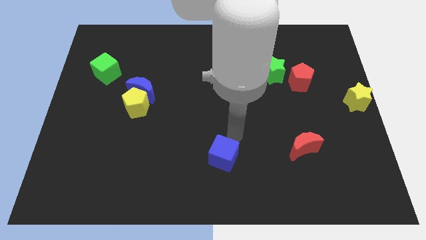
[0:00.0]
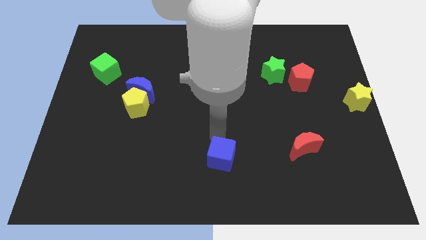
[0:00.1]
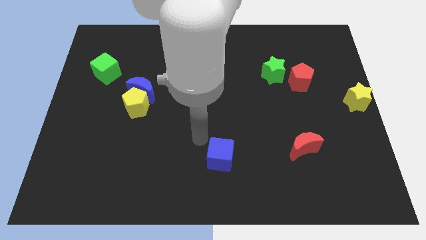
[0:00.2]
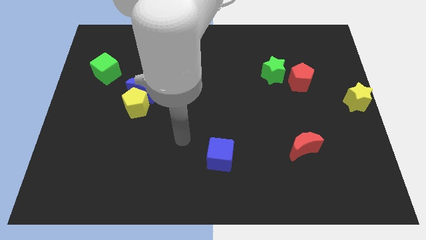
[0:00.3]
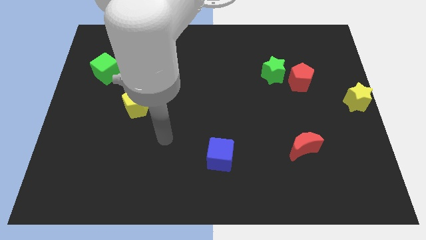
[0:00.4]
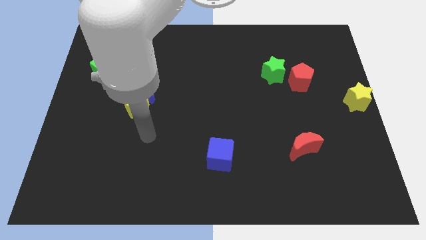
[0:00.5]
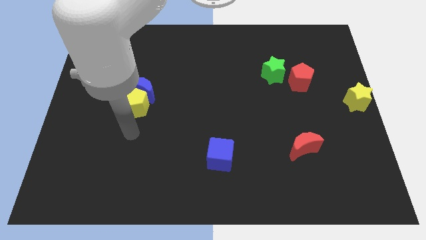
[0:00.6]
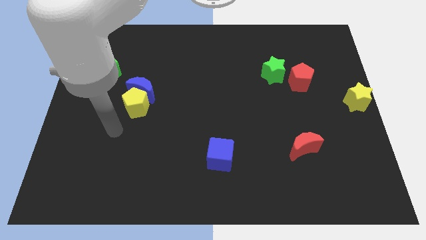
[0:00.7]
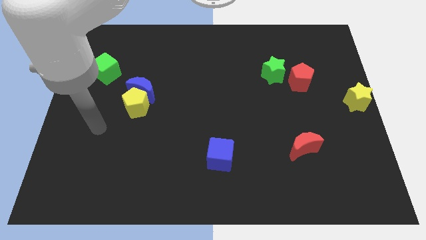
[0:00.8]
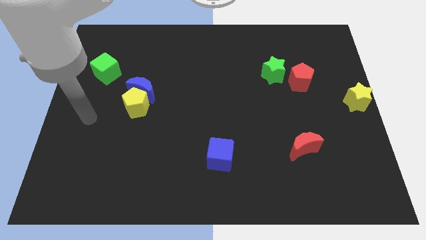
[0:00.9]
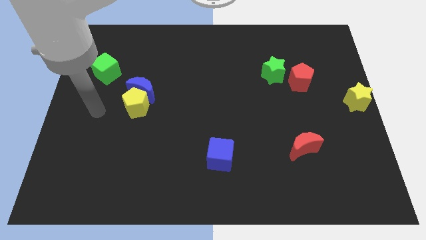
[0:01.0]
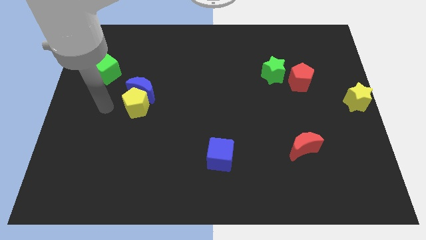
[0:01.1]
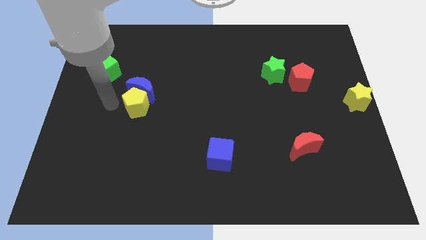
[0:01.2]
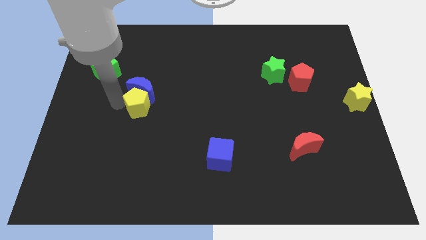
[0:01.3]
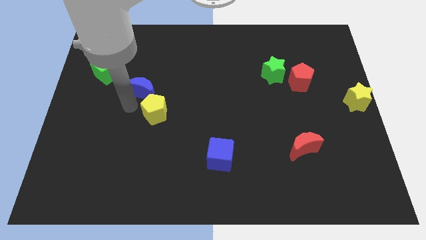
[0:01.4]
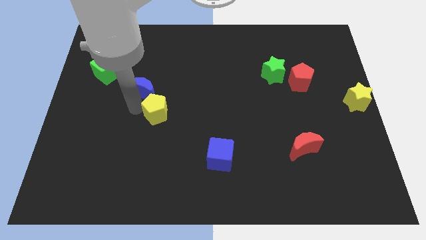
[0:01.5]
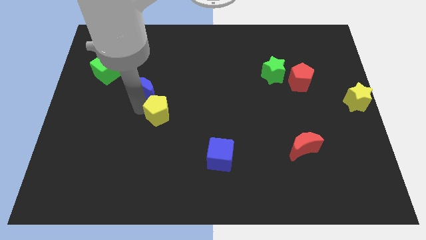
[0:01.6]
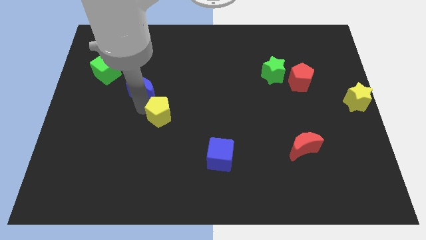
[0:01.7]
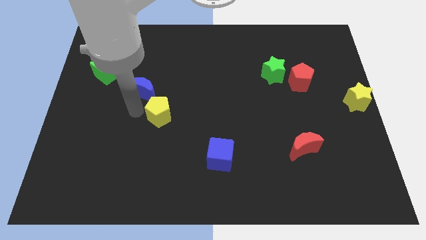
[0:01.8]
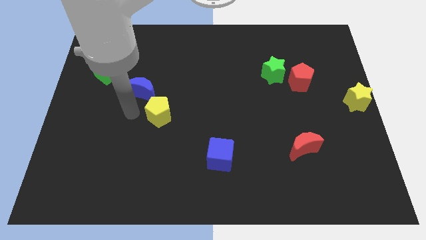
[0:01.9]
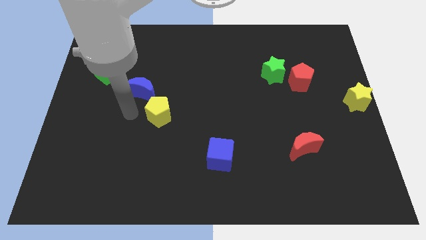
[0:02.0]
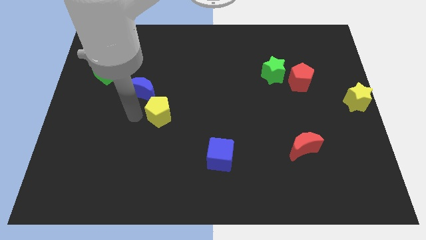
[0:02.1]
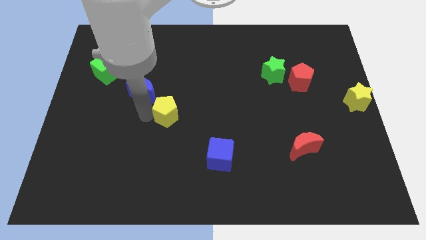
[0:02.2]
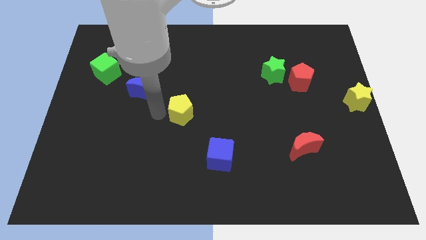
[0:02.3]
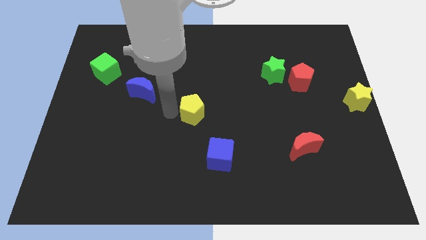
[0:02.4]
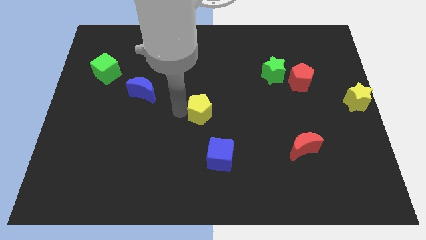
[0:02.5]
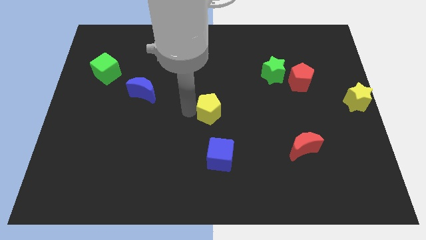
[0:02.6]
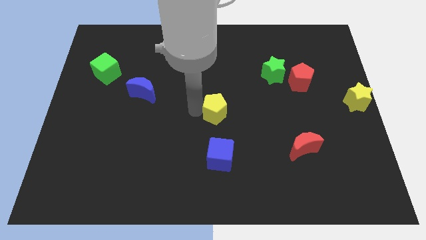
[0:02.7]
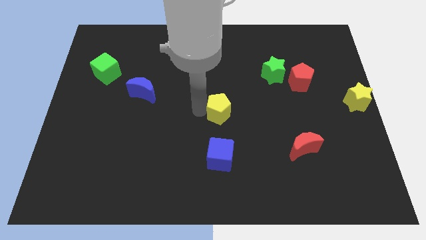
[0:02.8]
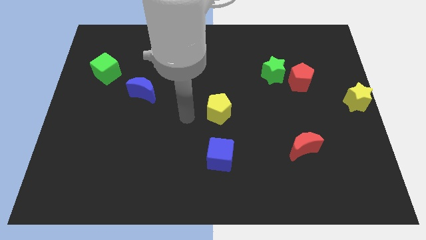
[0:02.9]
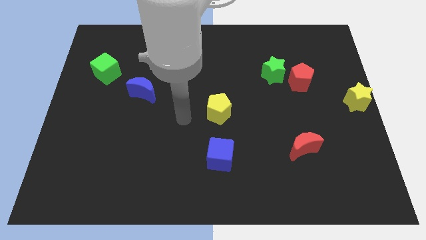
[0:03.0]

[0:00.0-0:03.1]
place yellow pentagon at the center of the board

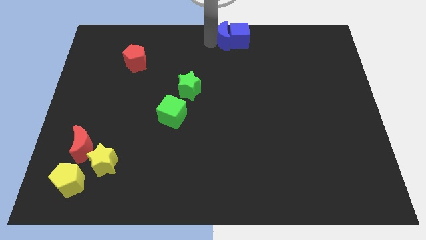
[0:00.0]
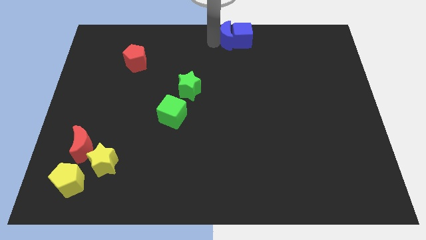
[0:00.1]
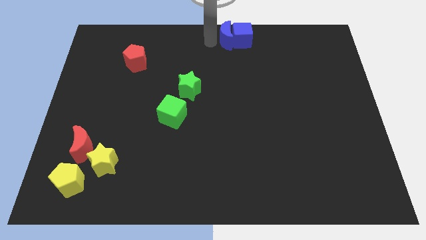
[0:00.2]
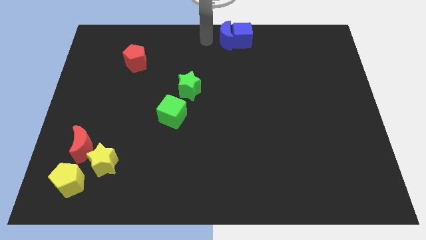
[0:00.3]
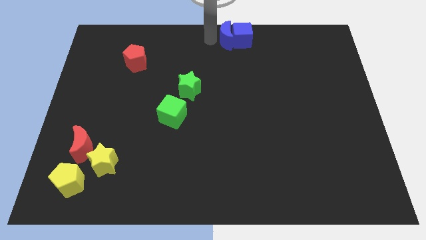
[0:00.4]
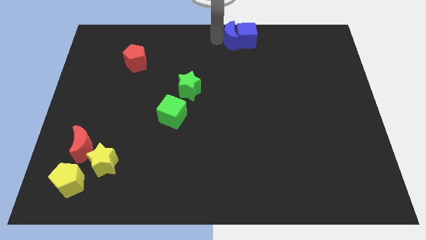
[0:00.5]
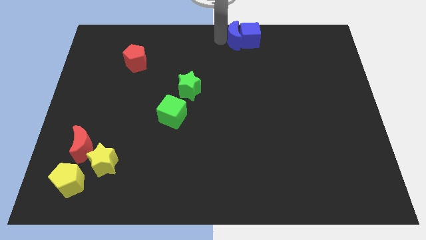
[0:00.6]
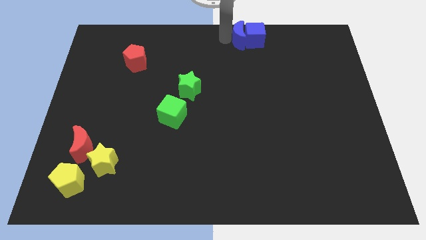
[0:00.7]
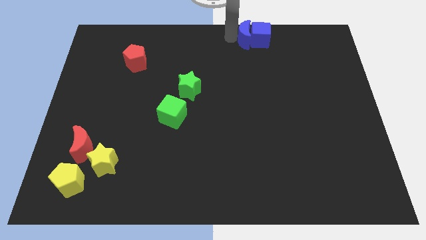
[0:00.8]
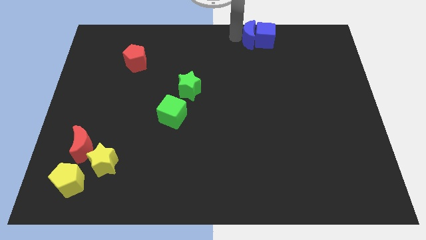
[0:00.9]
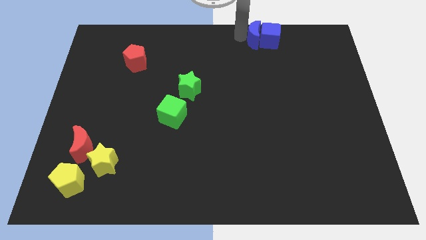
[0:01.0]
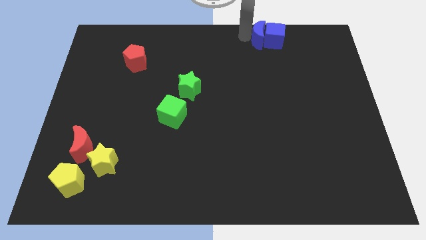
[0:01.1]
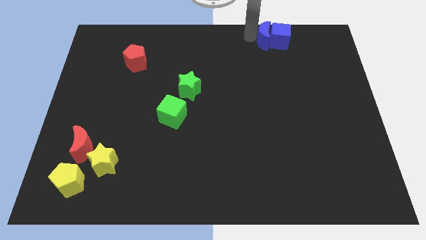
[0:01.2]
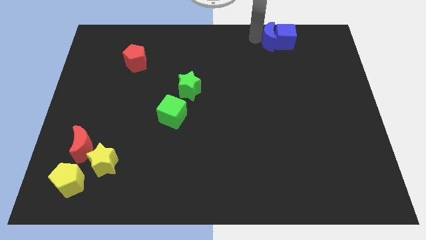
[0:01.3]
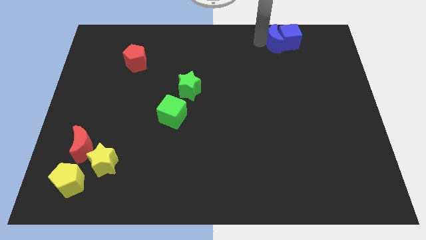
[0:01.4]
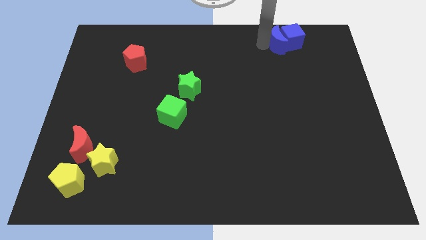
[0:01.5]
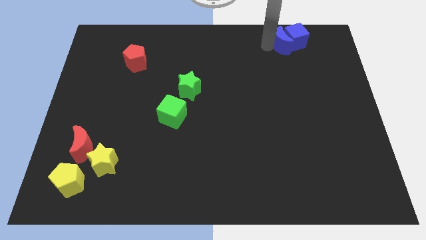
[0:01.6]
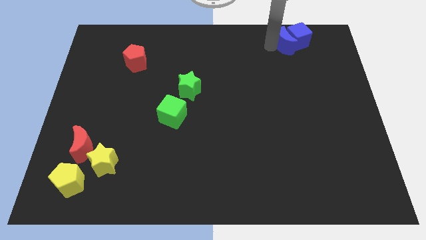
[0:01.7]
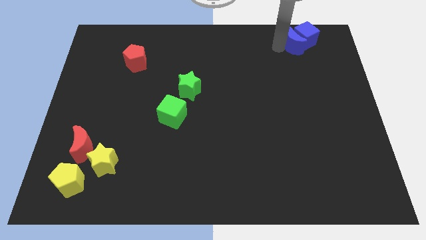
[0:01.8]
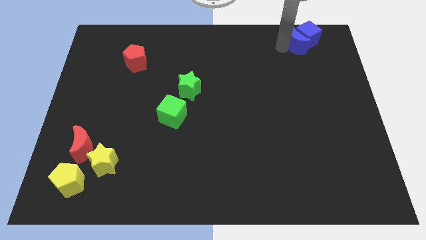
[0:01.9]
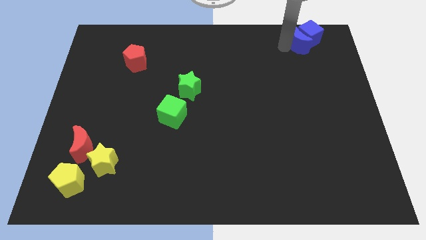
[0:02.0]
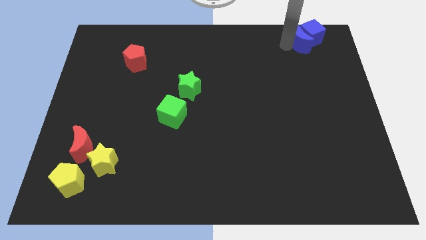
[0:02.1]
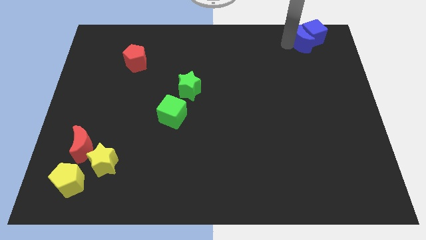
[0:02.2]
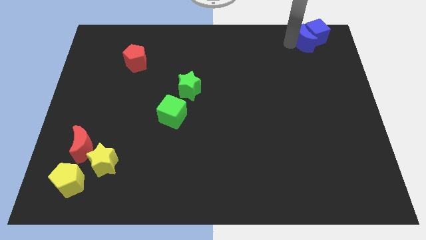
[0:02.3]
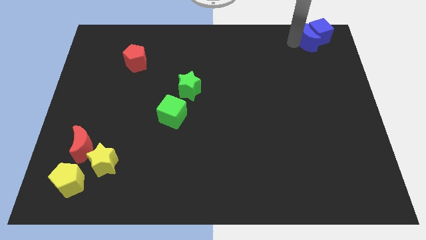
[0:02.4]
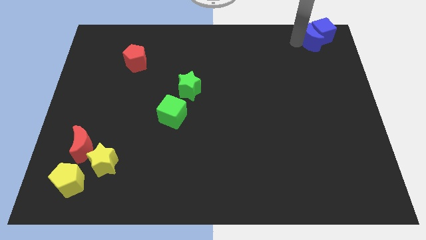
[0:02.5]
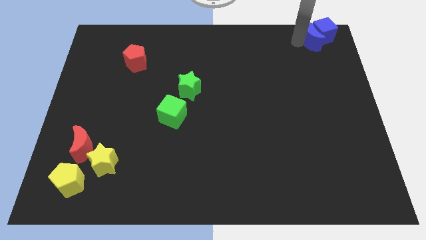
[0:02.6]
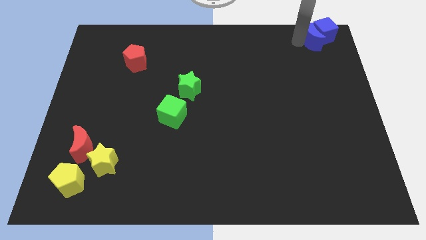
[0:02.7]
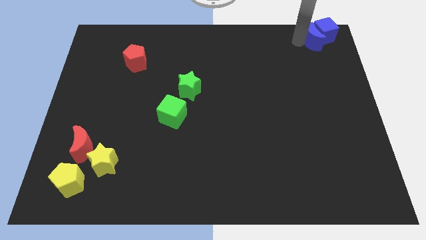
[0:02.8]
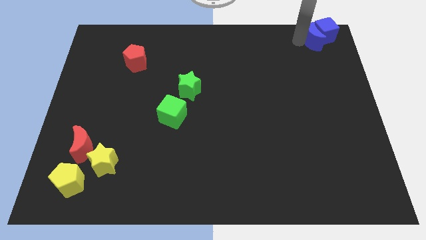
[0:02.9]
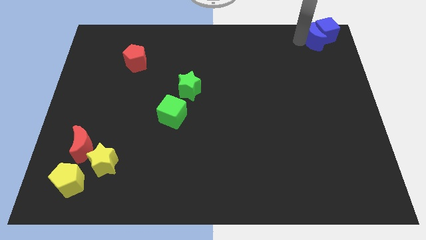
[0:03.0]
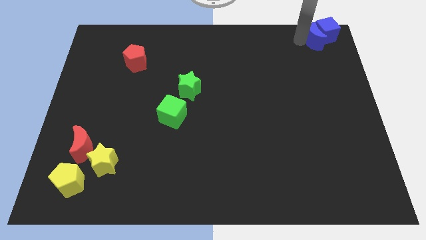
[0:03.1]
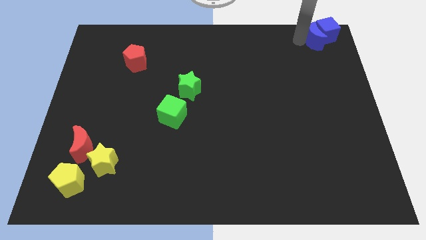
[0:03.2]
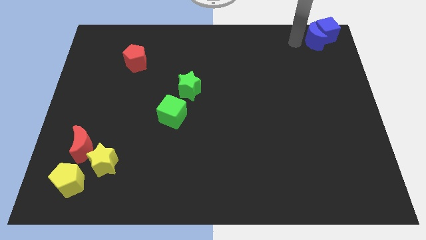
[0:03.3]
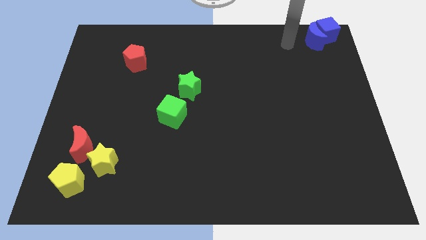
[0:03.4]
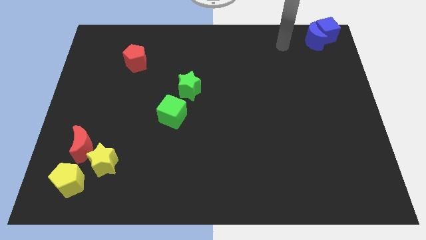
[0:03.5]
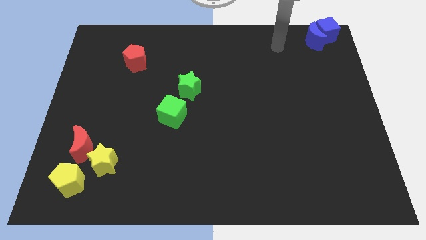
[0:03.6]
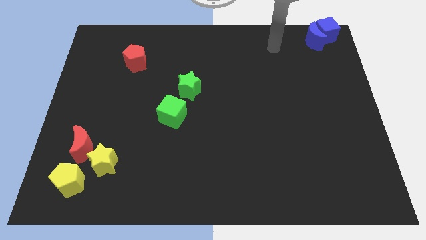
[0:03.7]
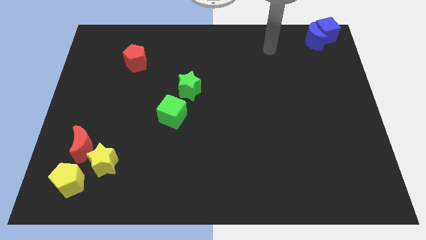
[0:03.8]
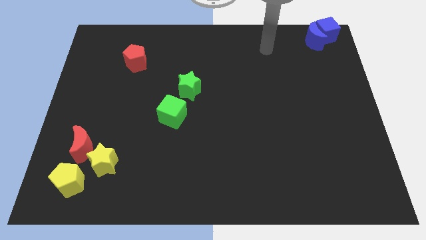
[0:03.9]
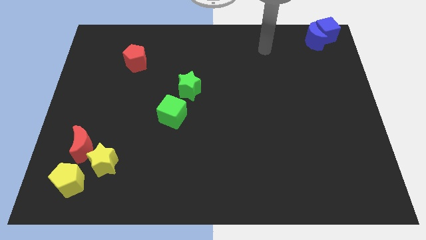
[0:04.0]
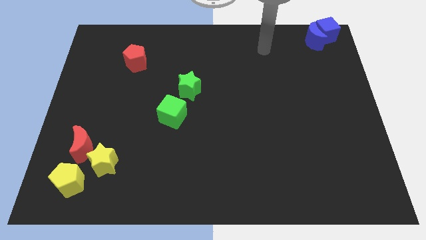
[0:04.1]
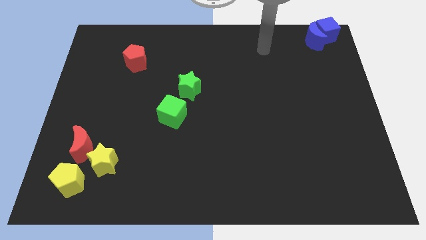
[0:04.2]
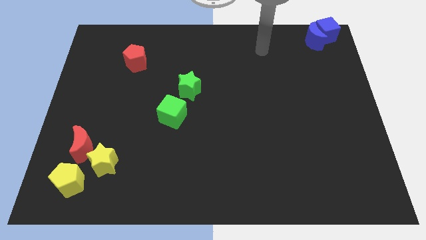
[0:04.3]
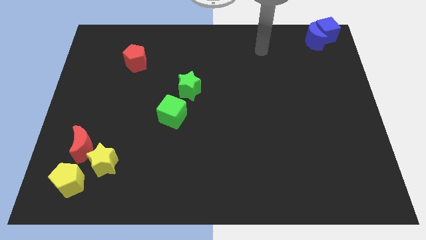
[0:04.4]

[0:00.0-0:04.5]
push the blue crescent and blue cube to the right top corner

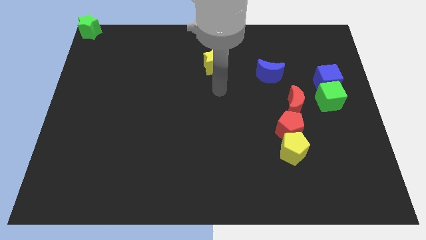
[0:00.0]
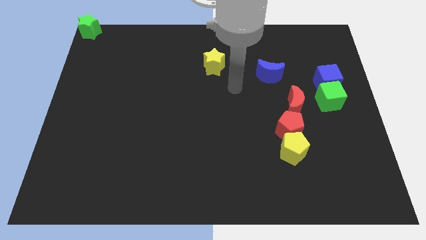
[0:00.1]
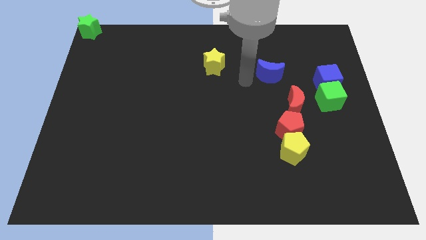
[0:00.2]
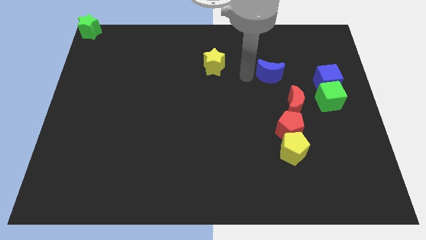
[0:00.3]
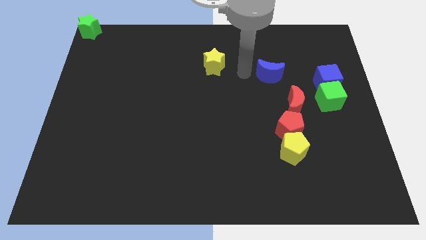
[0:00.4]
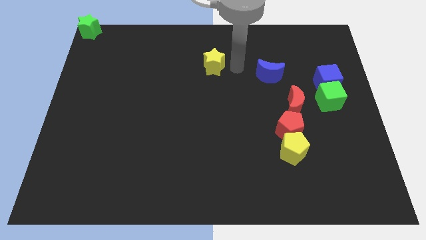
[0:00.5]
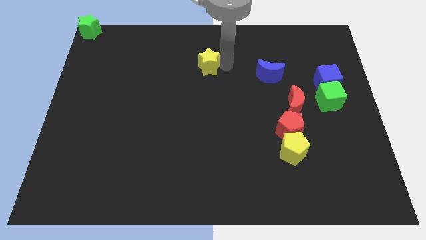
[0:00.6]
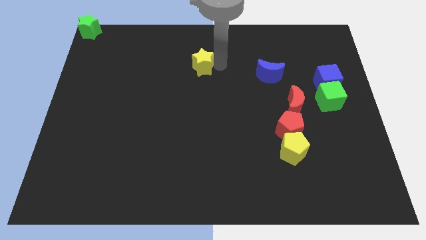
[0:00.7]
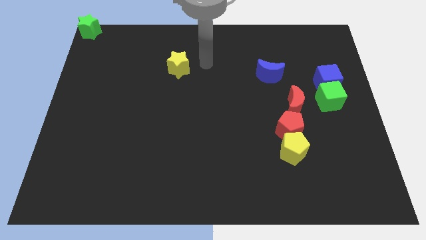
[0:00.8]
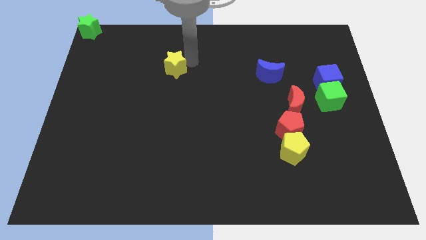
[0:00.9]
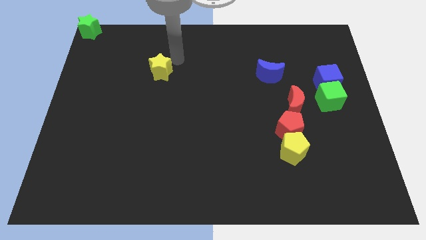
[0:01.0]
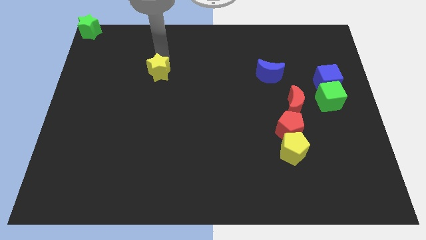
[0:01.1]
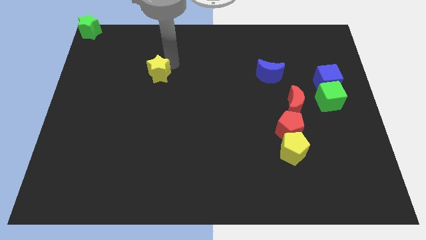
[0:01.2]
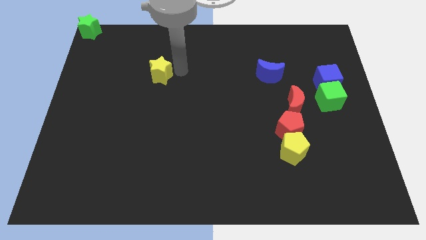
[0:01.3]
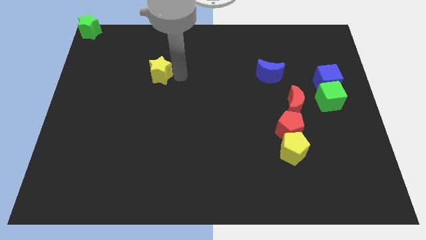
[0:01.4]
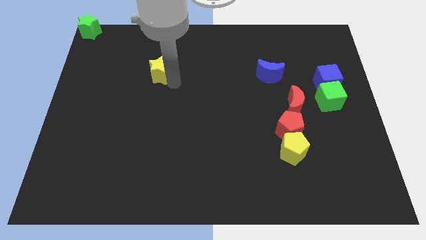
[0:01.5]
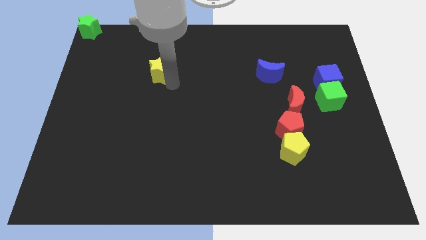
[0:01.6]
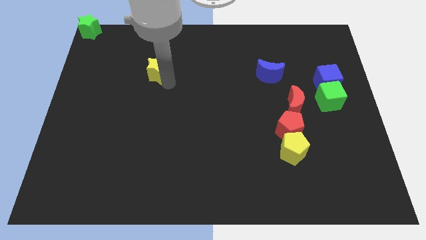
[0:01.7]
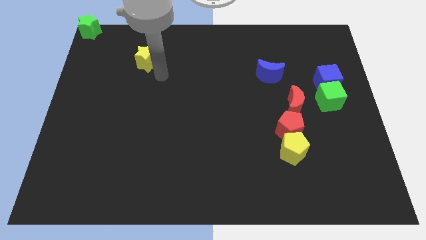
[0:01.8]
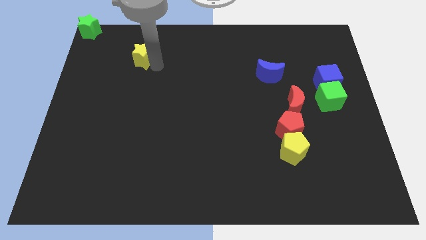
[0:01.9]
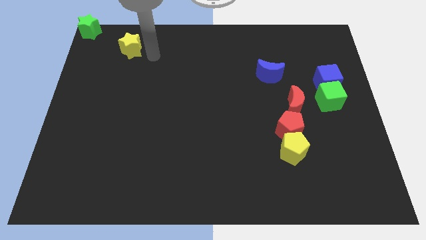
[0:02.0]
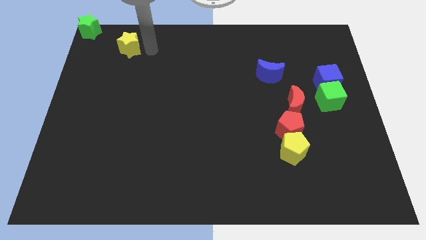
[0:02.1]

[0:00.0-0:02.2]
push the yellow star towards the green star
